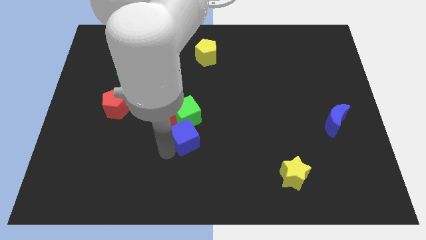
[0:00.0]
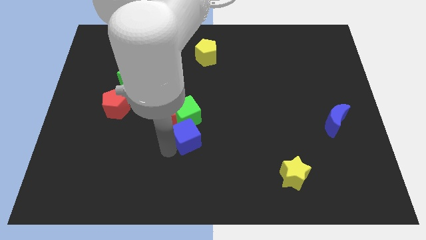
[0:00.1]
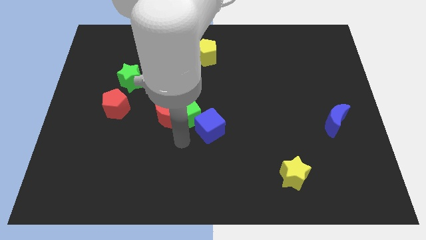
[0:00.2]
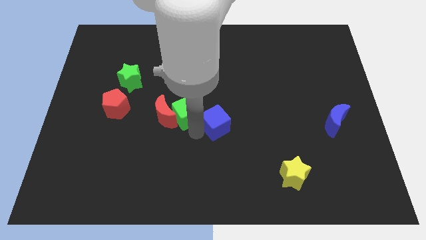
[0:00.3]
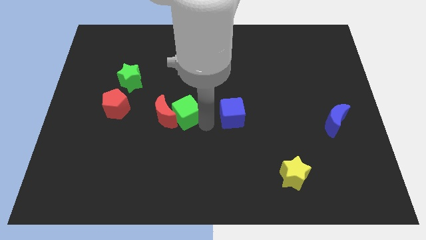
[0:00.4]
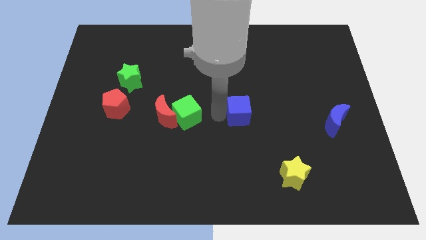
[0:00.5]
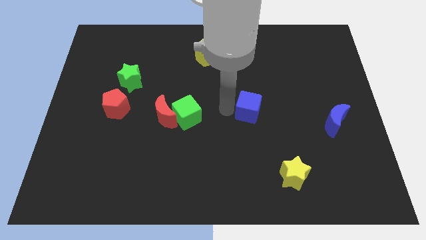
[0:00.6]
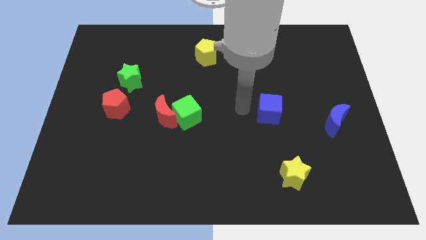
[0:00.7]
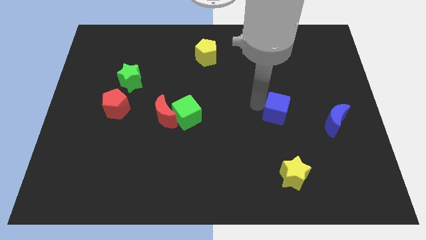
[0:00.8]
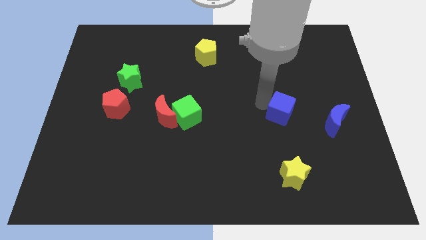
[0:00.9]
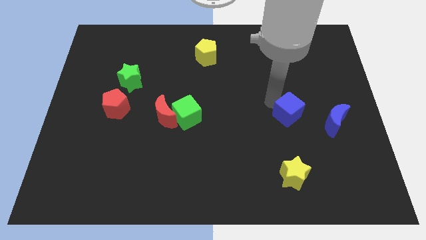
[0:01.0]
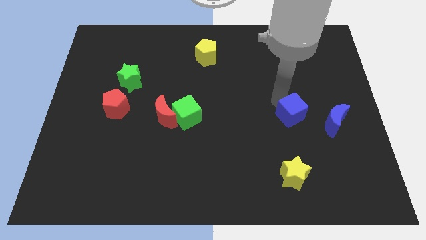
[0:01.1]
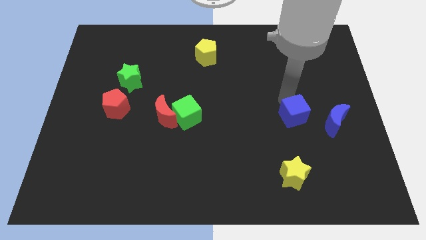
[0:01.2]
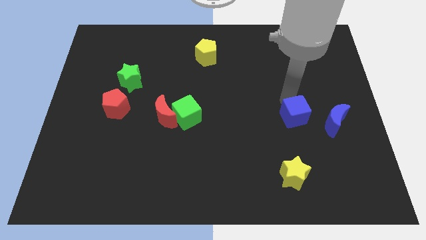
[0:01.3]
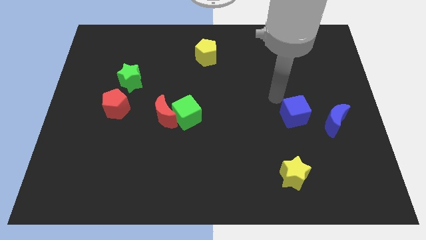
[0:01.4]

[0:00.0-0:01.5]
push the blue cube to the top of the yellow star

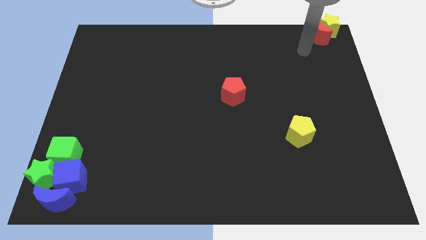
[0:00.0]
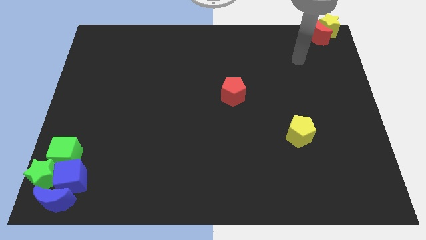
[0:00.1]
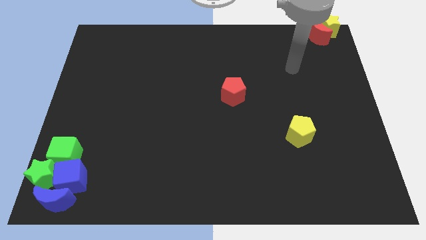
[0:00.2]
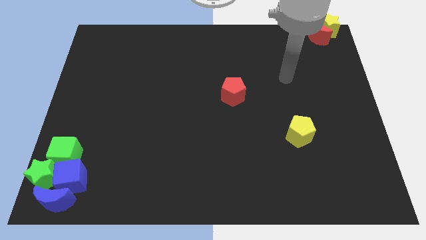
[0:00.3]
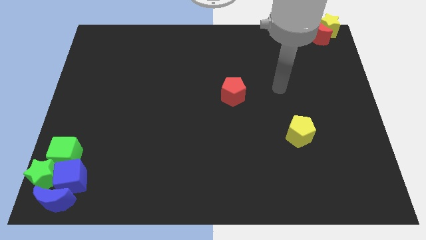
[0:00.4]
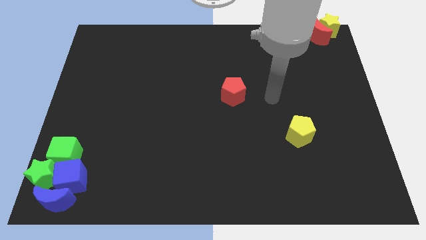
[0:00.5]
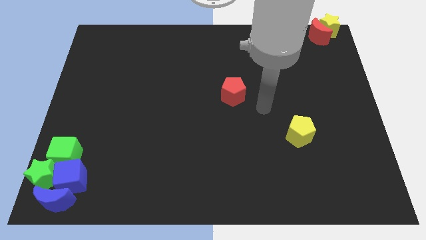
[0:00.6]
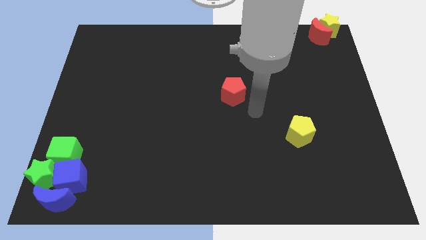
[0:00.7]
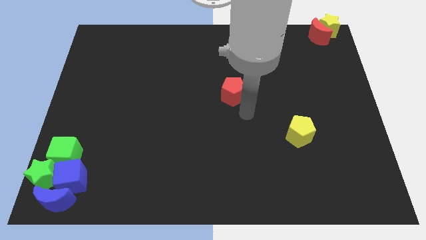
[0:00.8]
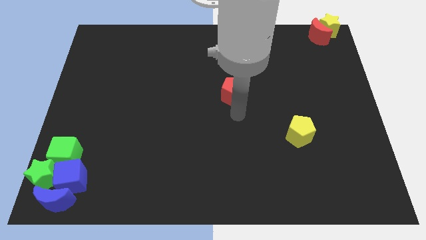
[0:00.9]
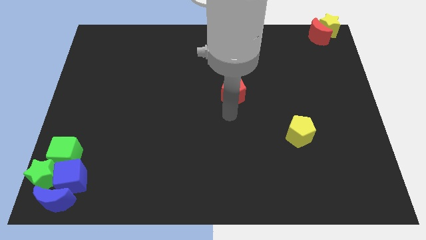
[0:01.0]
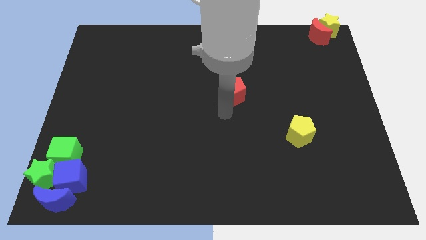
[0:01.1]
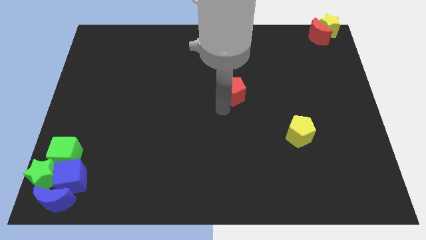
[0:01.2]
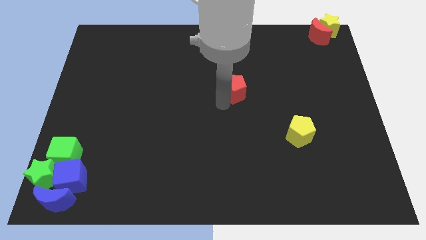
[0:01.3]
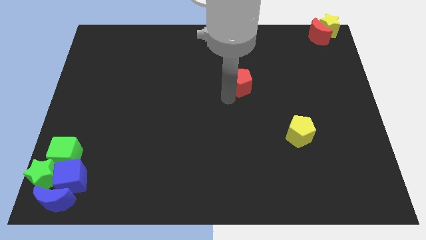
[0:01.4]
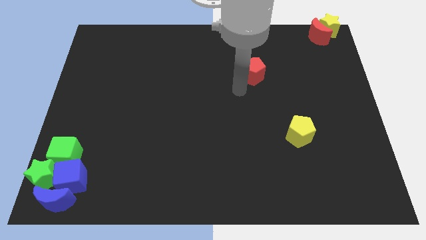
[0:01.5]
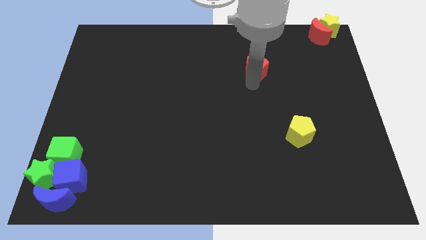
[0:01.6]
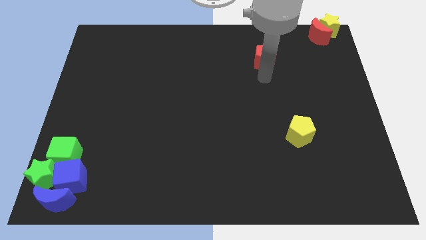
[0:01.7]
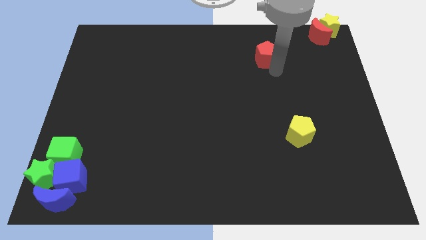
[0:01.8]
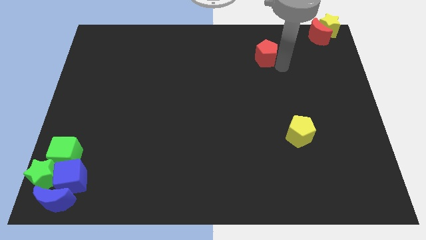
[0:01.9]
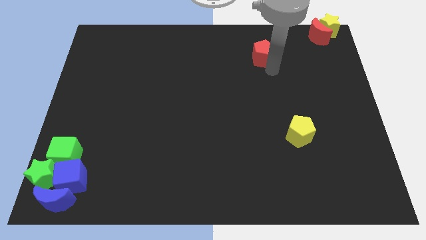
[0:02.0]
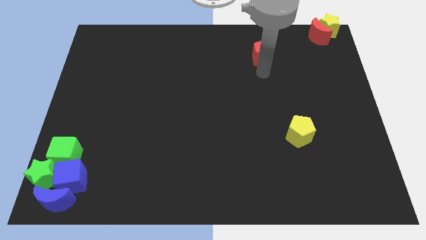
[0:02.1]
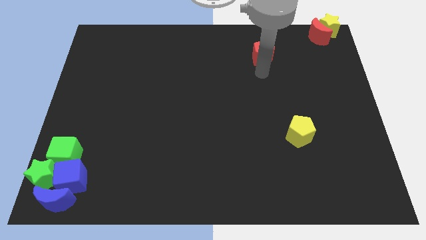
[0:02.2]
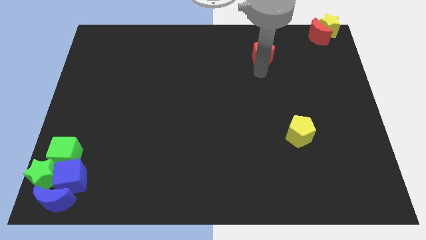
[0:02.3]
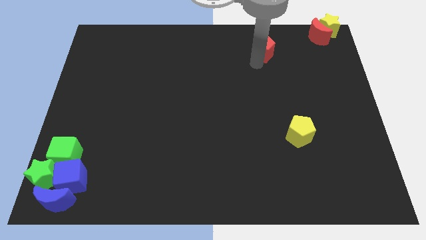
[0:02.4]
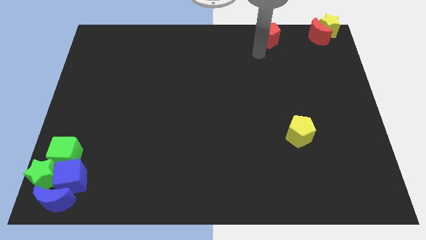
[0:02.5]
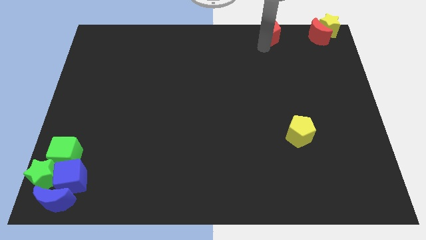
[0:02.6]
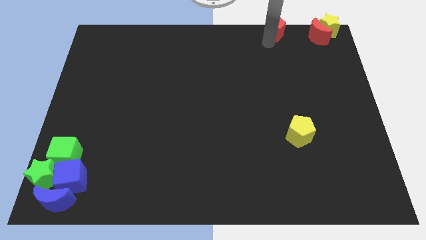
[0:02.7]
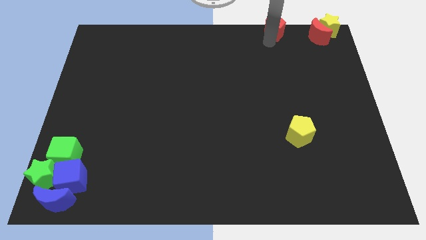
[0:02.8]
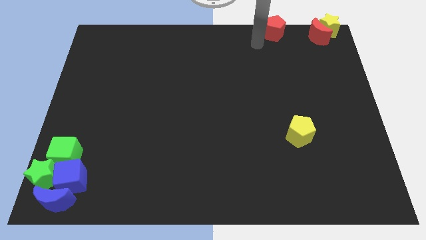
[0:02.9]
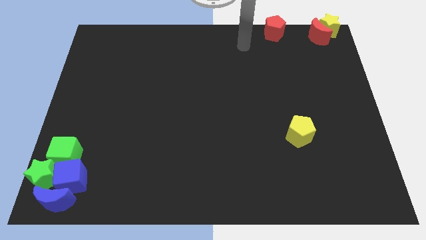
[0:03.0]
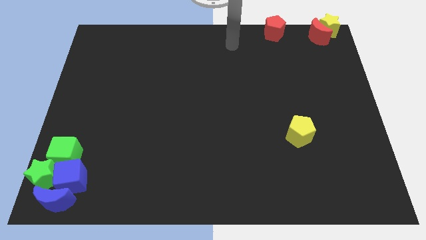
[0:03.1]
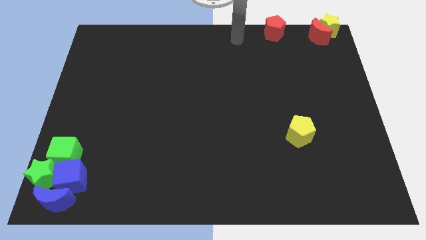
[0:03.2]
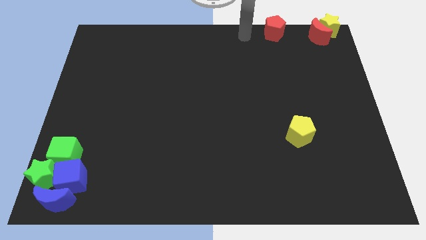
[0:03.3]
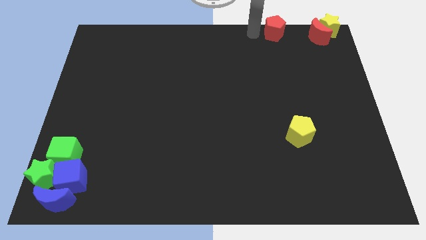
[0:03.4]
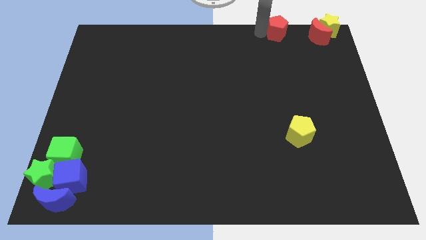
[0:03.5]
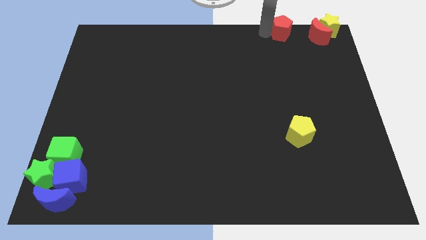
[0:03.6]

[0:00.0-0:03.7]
place the red pentagon to the left side of the red moon

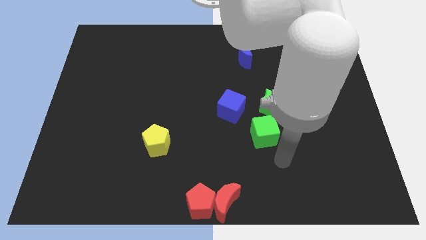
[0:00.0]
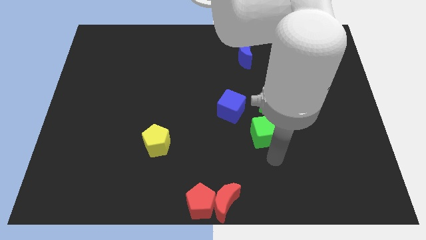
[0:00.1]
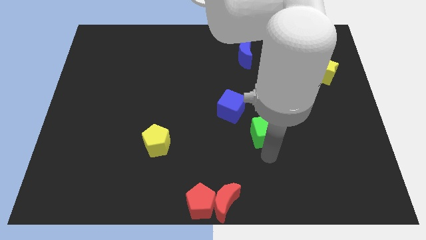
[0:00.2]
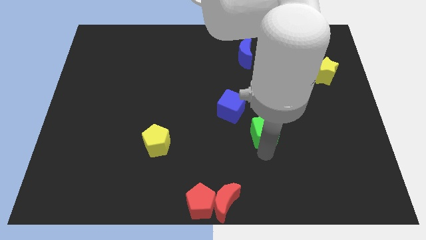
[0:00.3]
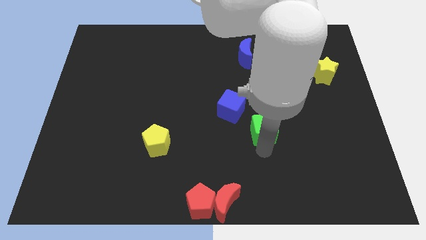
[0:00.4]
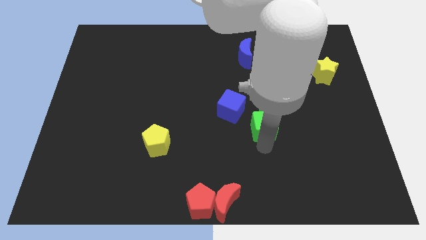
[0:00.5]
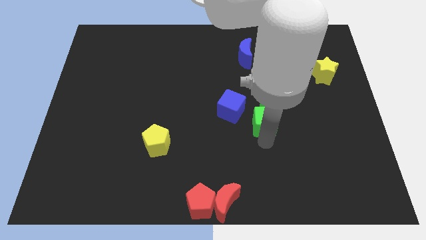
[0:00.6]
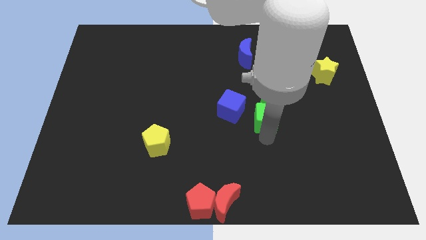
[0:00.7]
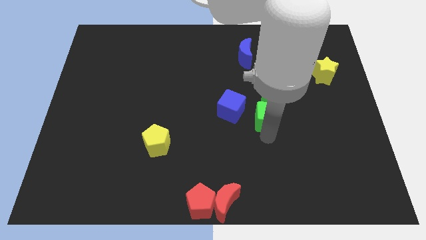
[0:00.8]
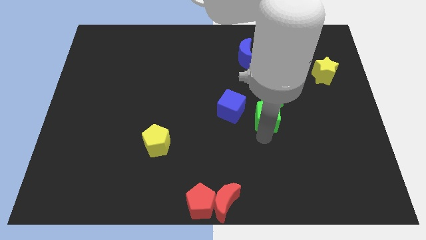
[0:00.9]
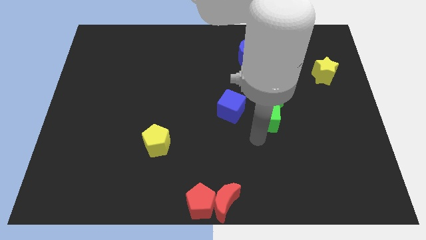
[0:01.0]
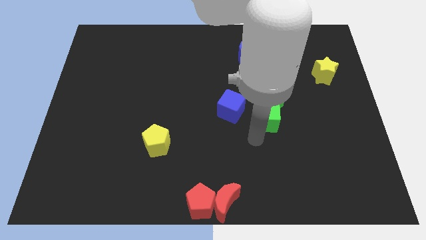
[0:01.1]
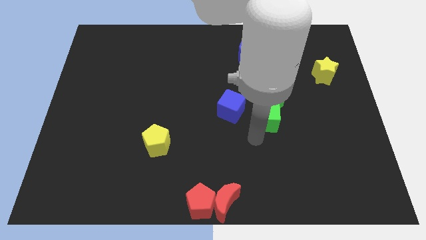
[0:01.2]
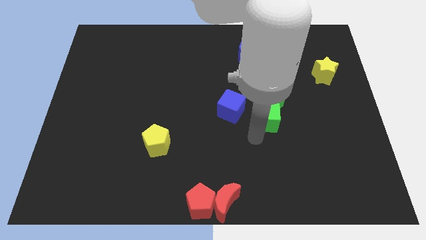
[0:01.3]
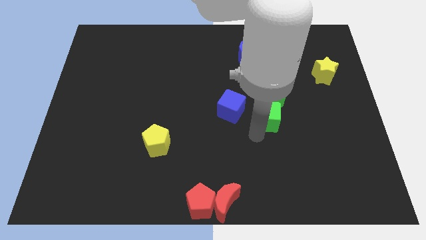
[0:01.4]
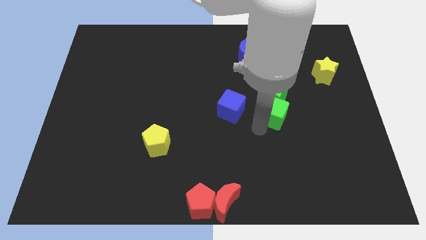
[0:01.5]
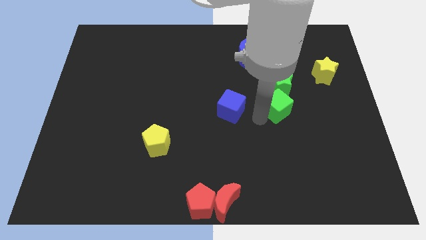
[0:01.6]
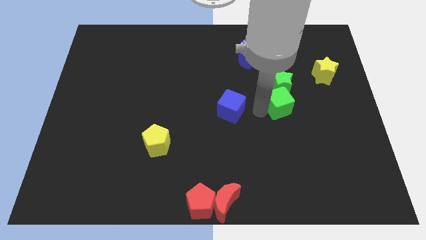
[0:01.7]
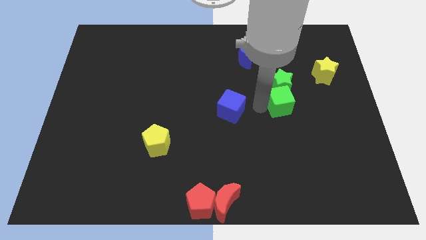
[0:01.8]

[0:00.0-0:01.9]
push the green cube into the green star

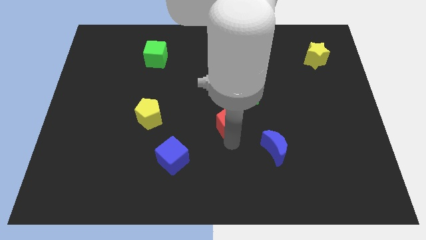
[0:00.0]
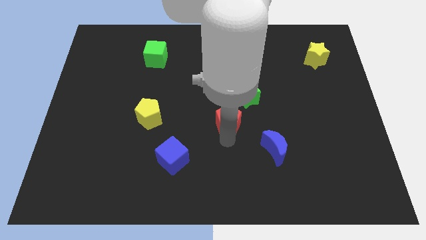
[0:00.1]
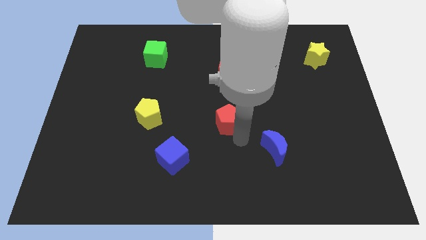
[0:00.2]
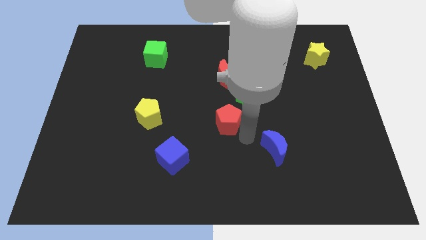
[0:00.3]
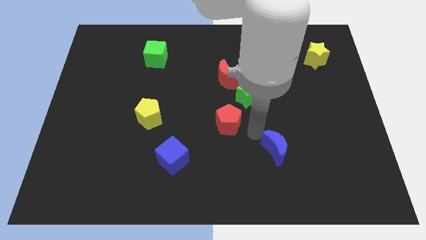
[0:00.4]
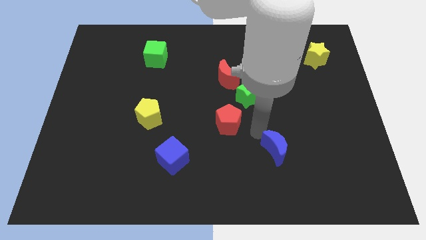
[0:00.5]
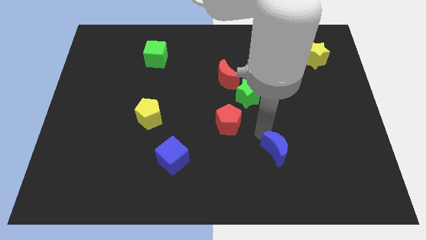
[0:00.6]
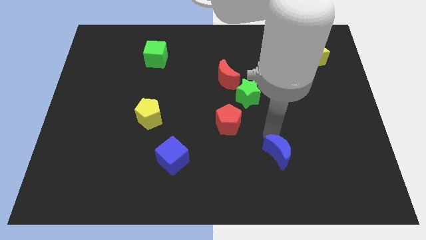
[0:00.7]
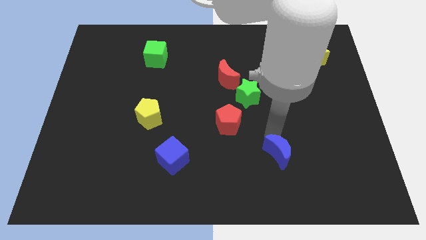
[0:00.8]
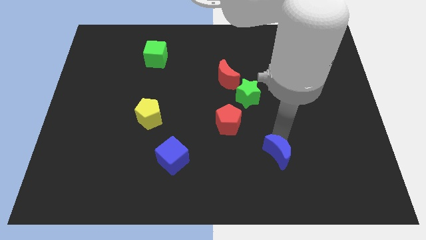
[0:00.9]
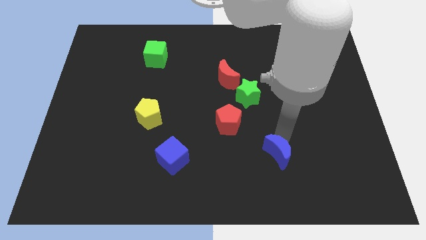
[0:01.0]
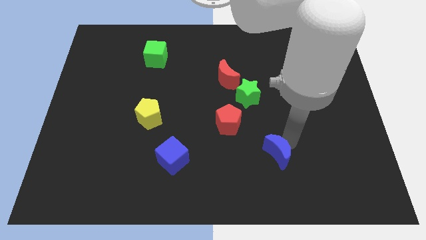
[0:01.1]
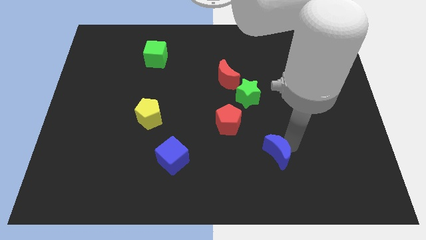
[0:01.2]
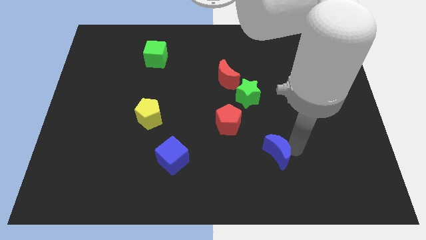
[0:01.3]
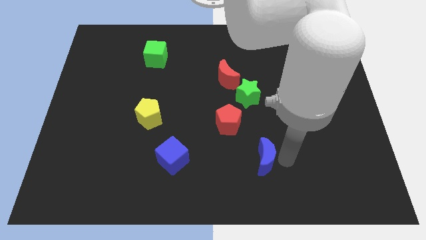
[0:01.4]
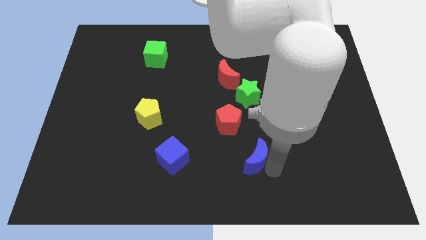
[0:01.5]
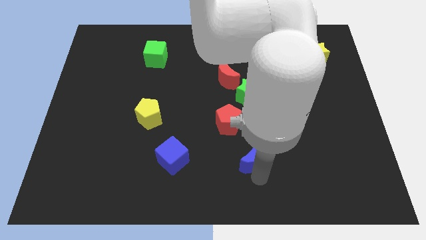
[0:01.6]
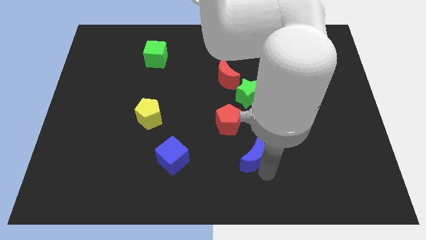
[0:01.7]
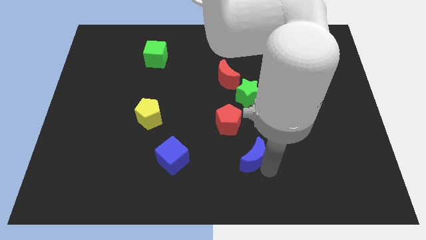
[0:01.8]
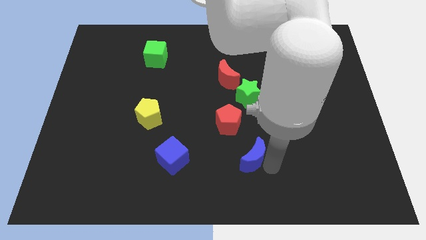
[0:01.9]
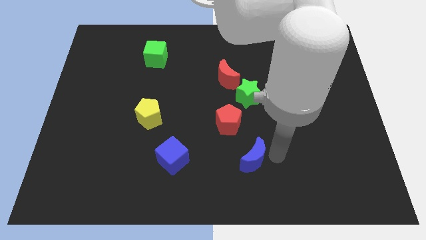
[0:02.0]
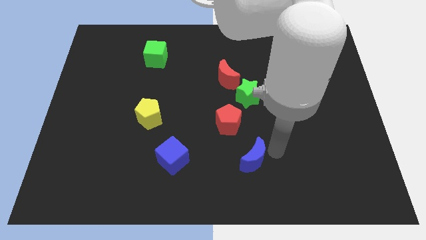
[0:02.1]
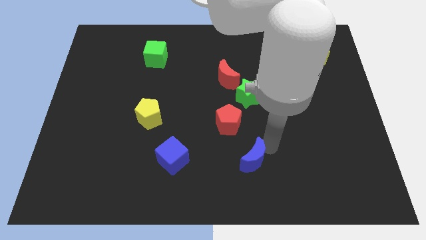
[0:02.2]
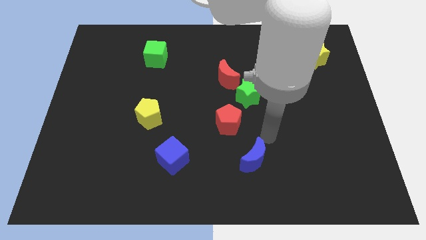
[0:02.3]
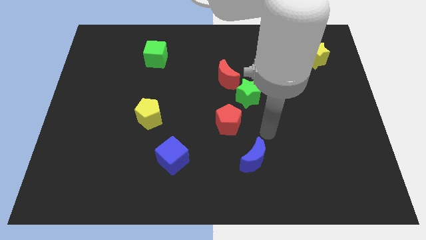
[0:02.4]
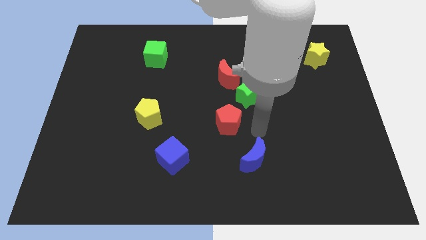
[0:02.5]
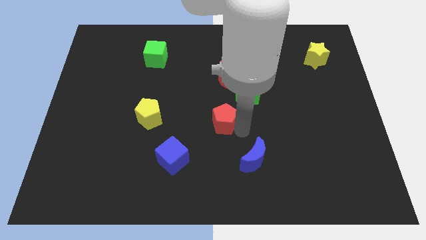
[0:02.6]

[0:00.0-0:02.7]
slide the blue moon diagonally bottom right to the red pentagon
